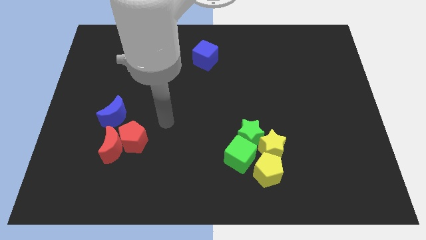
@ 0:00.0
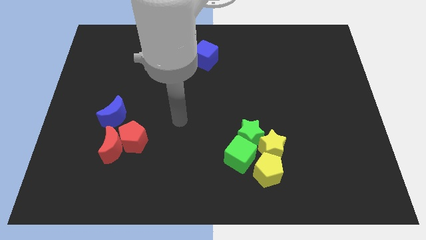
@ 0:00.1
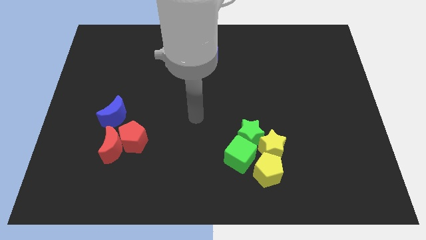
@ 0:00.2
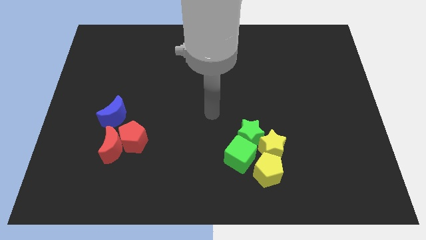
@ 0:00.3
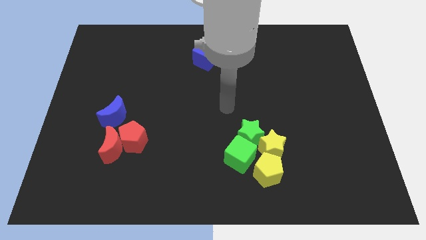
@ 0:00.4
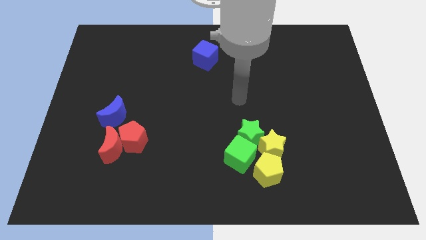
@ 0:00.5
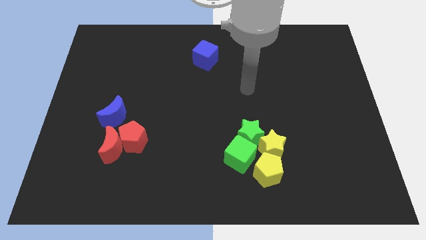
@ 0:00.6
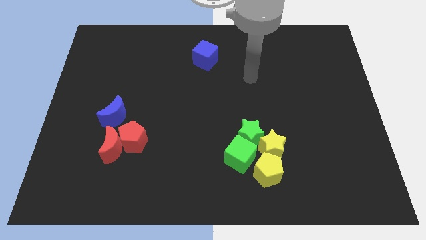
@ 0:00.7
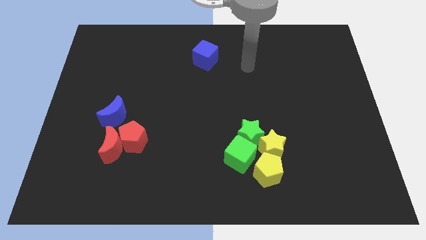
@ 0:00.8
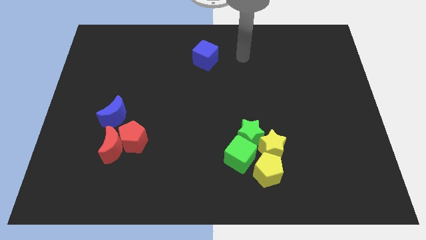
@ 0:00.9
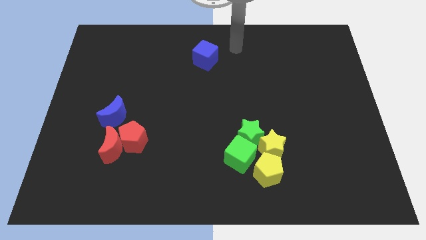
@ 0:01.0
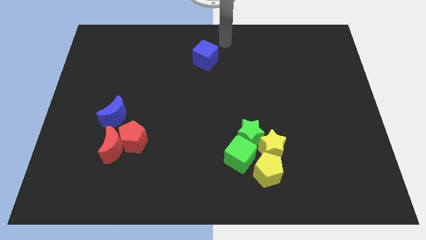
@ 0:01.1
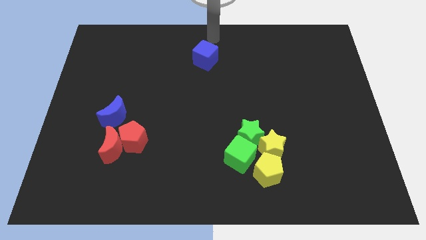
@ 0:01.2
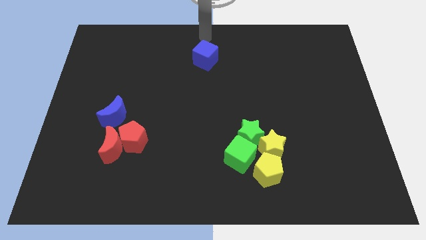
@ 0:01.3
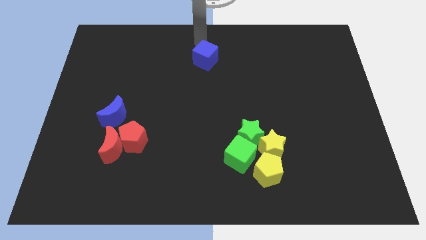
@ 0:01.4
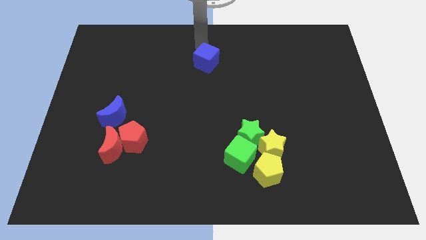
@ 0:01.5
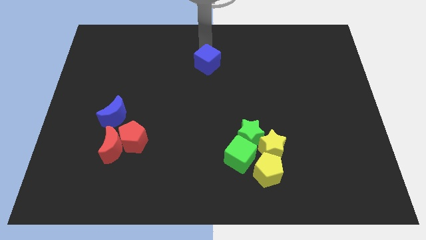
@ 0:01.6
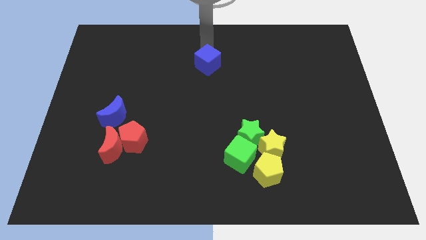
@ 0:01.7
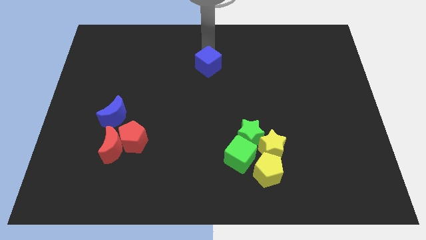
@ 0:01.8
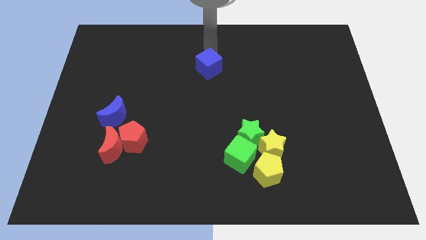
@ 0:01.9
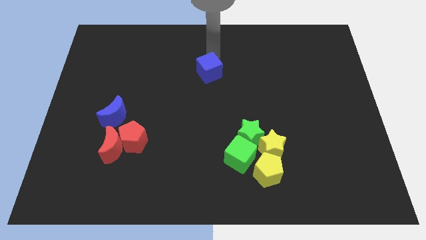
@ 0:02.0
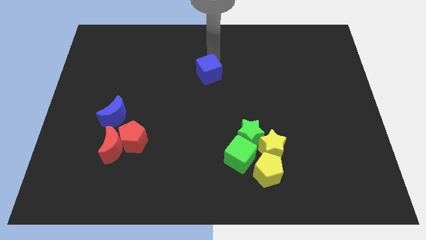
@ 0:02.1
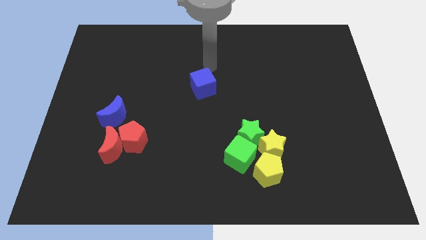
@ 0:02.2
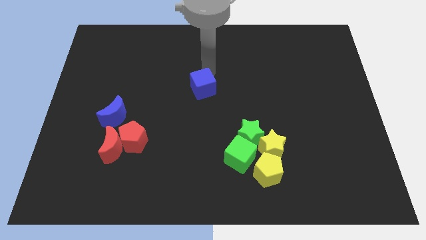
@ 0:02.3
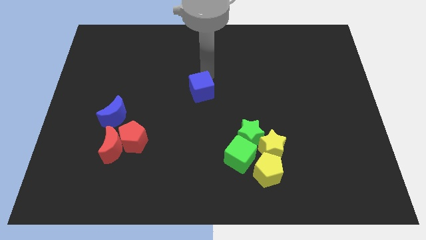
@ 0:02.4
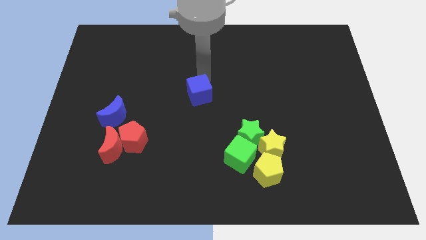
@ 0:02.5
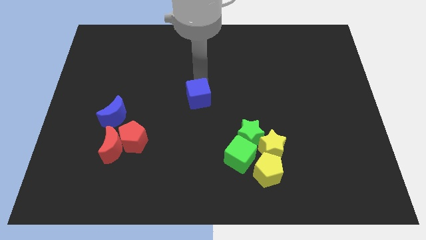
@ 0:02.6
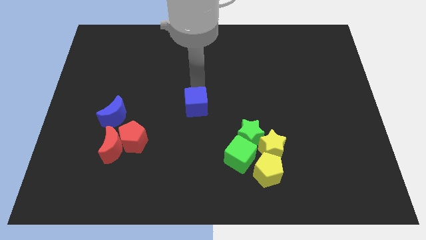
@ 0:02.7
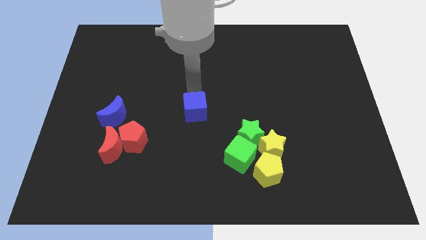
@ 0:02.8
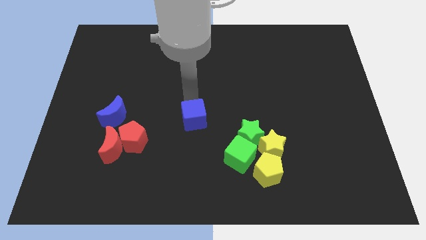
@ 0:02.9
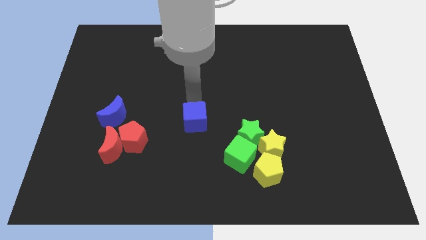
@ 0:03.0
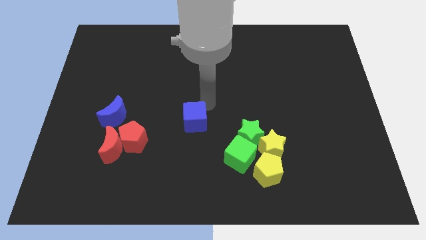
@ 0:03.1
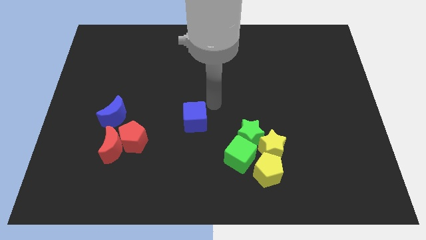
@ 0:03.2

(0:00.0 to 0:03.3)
place the blue cube diagonally on the top left side if the green cube

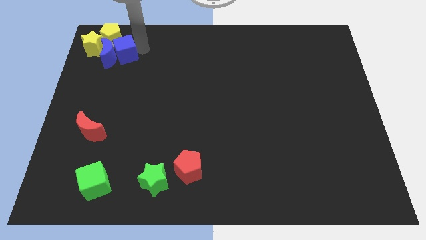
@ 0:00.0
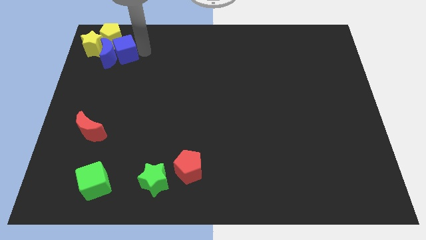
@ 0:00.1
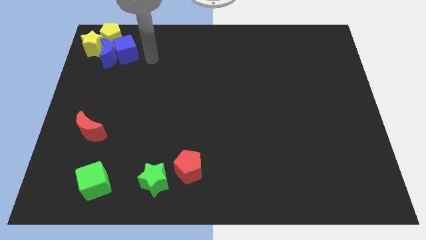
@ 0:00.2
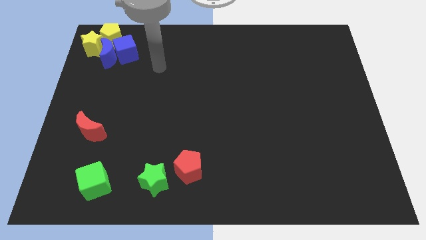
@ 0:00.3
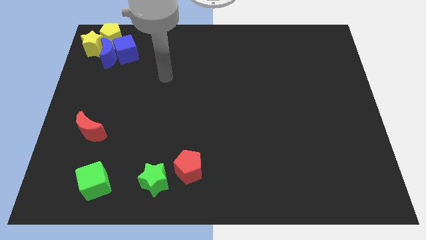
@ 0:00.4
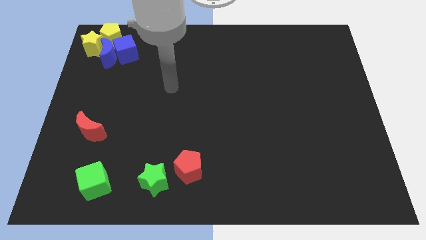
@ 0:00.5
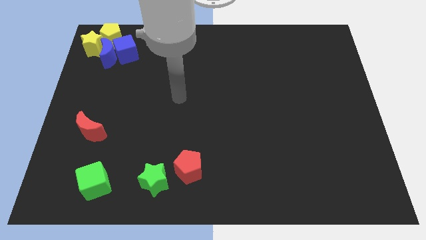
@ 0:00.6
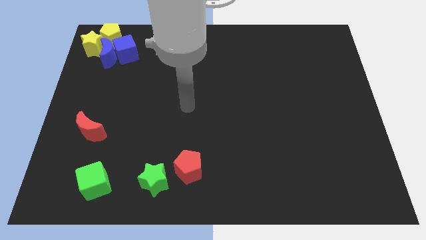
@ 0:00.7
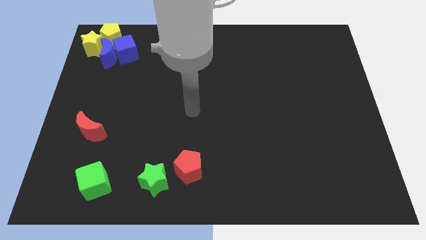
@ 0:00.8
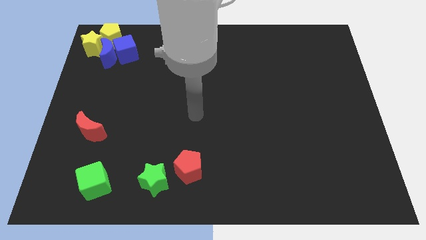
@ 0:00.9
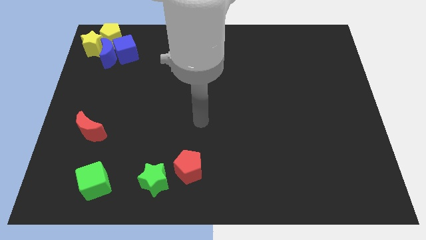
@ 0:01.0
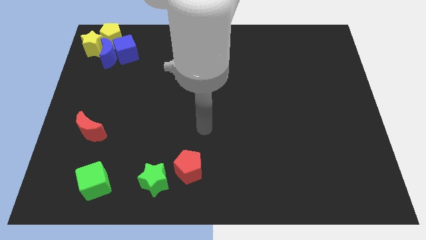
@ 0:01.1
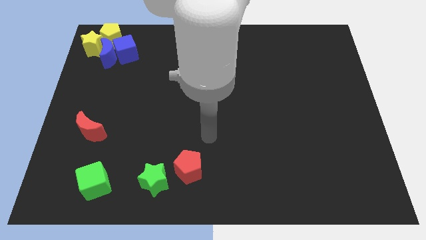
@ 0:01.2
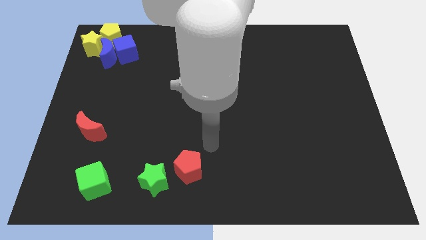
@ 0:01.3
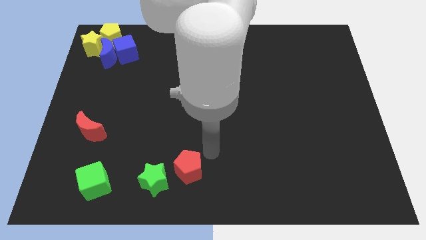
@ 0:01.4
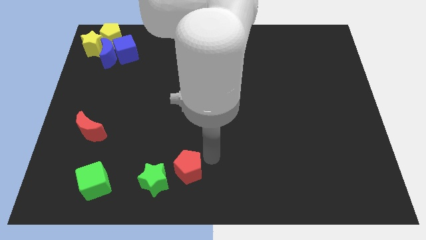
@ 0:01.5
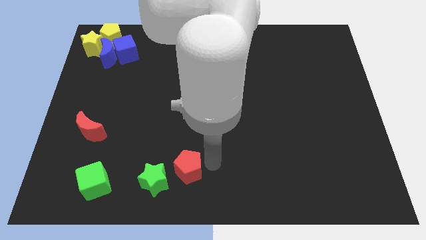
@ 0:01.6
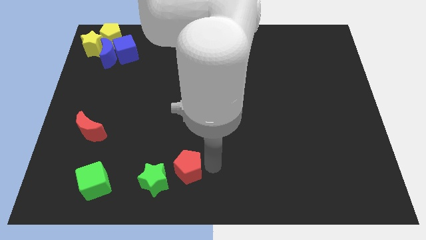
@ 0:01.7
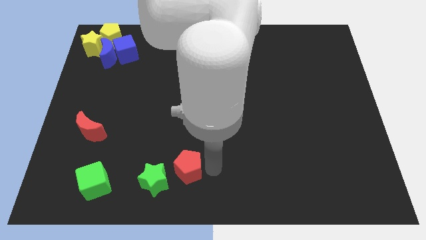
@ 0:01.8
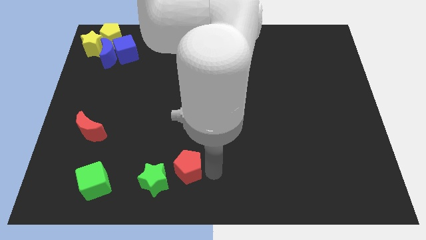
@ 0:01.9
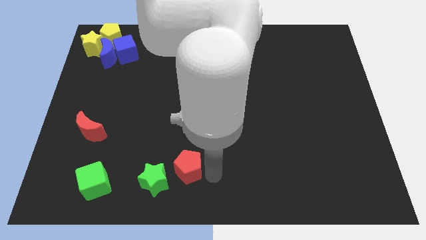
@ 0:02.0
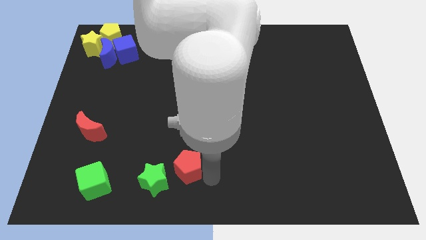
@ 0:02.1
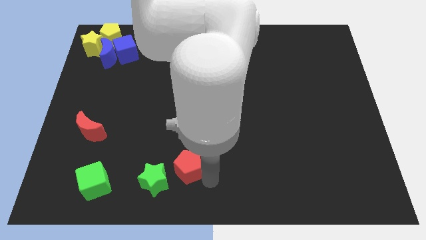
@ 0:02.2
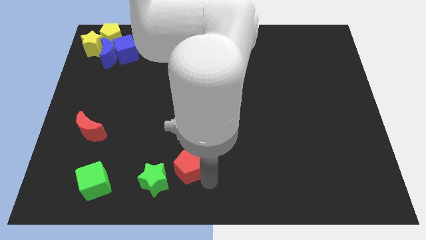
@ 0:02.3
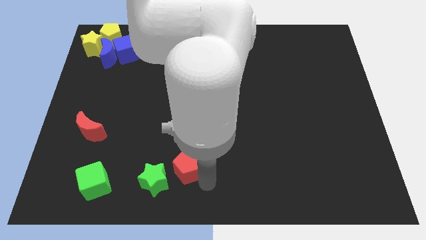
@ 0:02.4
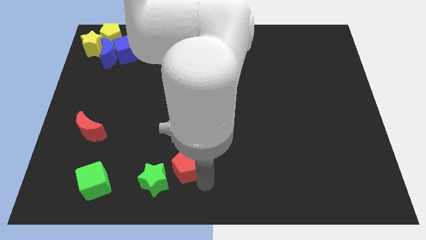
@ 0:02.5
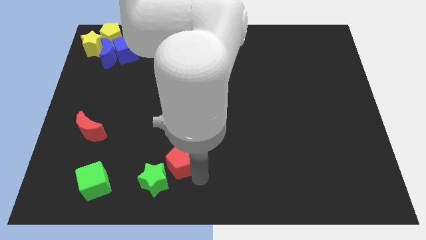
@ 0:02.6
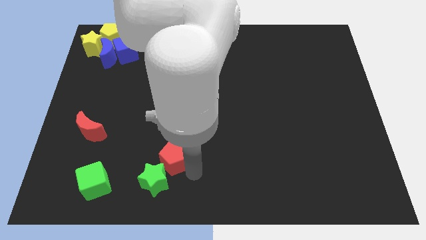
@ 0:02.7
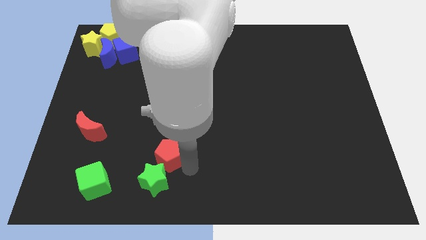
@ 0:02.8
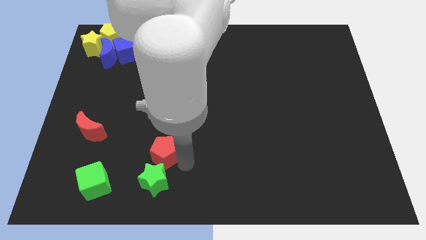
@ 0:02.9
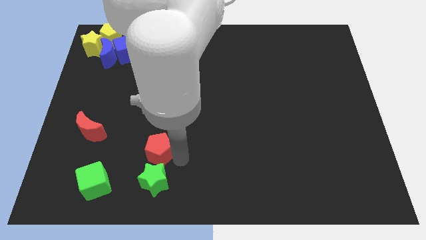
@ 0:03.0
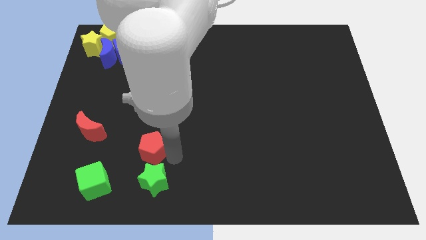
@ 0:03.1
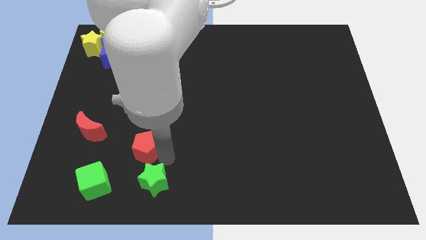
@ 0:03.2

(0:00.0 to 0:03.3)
place the red pentagon diagonal to the green cube

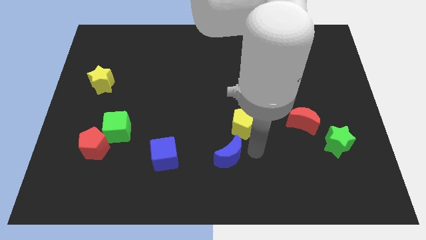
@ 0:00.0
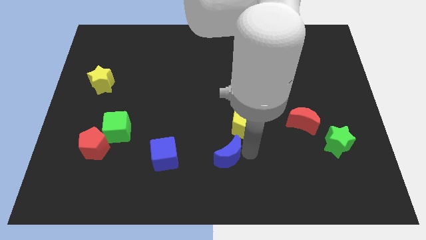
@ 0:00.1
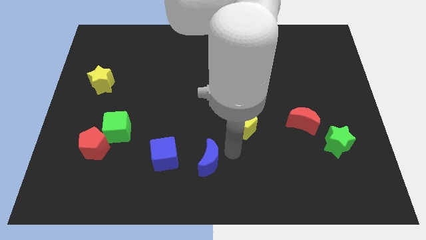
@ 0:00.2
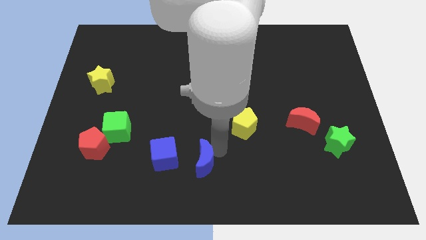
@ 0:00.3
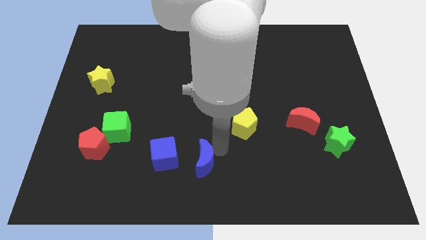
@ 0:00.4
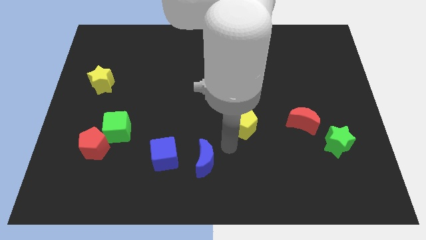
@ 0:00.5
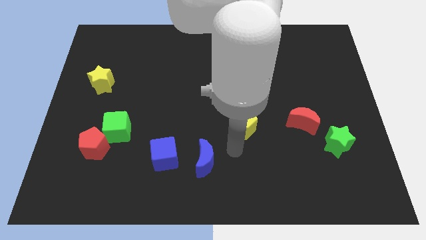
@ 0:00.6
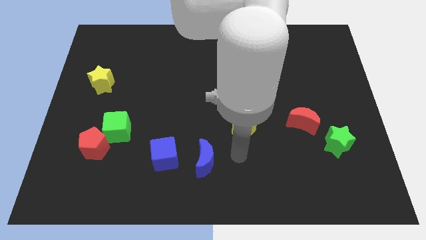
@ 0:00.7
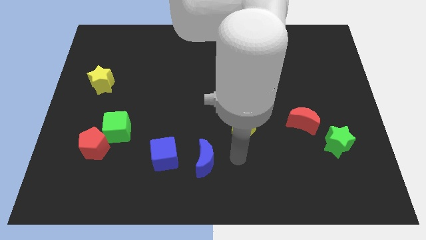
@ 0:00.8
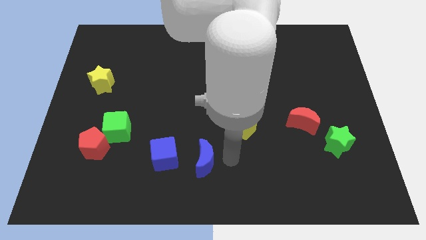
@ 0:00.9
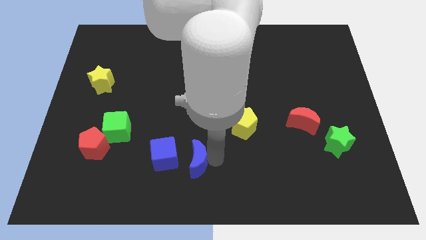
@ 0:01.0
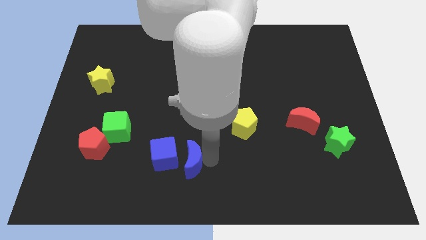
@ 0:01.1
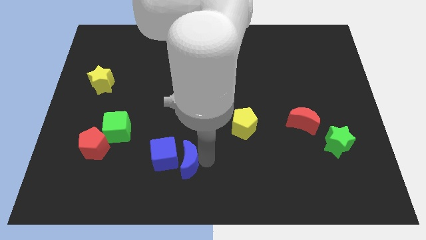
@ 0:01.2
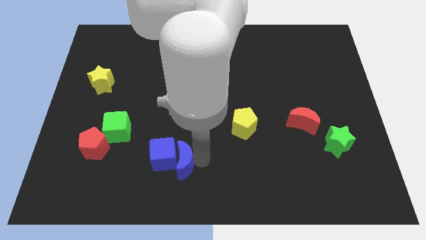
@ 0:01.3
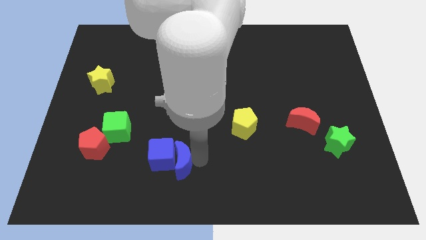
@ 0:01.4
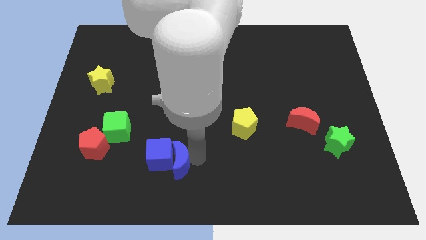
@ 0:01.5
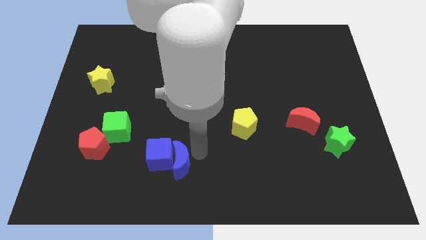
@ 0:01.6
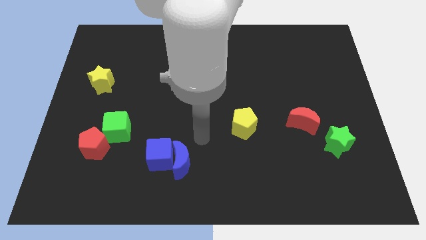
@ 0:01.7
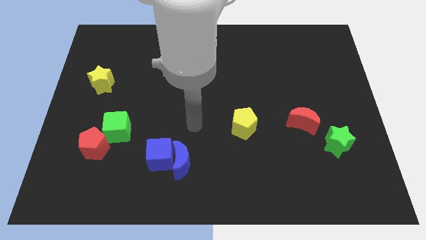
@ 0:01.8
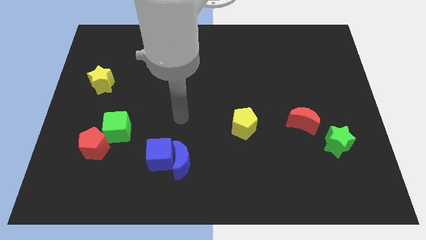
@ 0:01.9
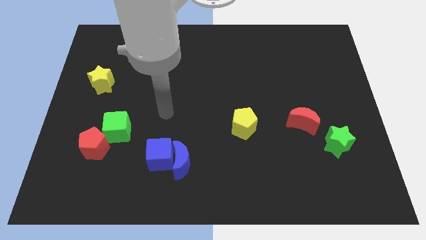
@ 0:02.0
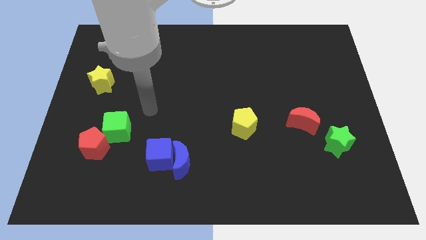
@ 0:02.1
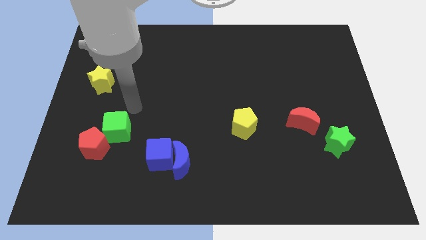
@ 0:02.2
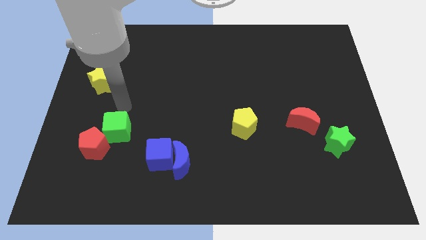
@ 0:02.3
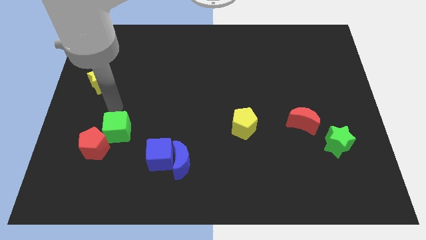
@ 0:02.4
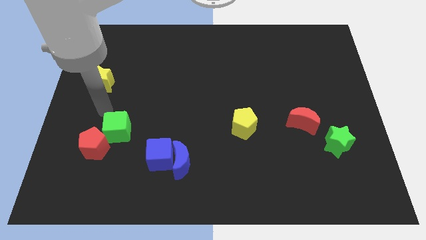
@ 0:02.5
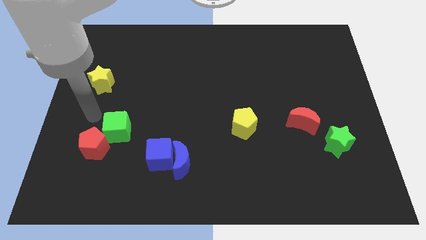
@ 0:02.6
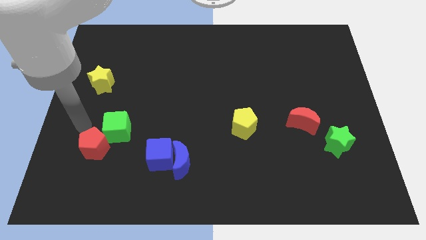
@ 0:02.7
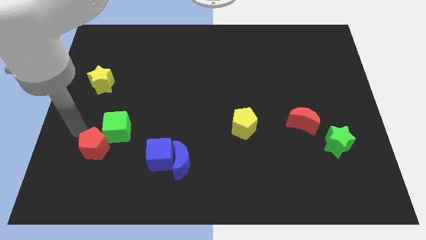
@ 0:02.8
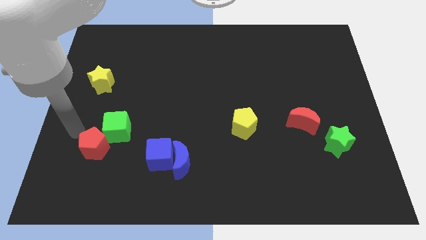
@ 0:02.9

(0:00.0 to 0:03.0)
move blue crescent into blue cube
